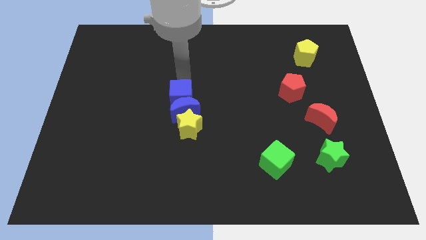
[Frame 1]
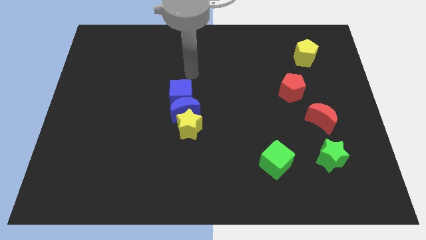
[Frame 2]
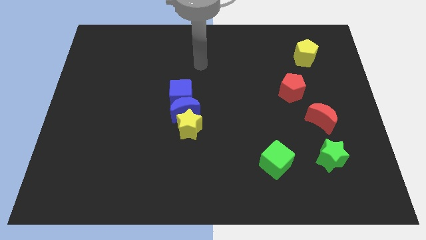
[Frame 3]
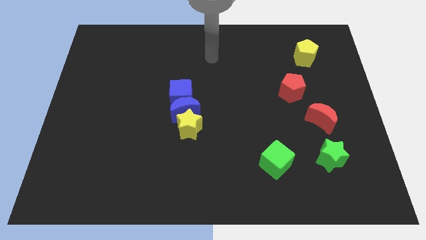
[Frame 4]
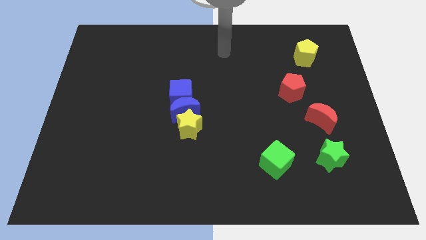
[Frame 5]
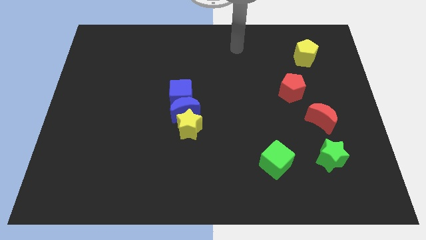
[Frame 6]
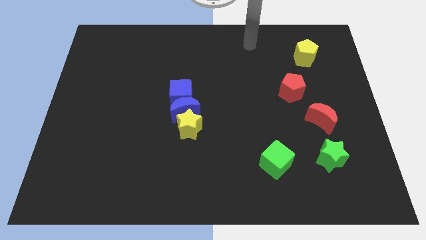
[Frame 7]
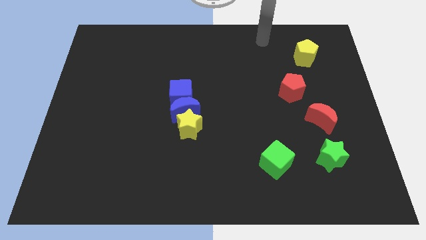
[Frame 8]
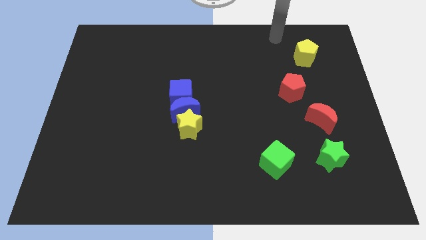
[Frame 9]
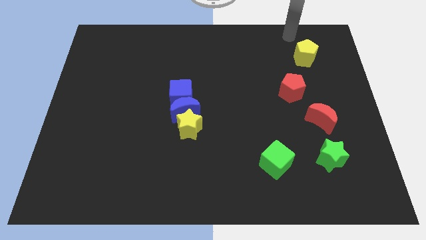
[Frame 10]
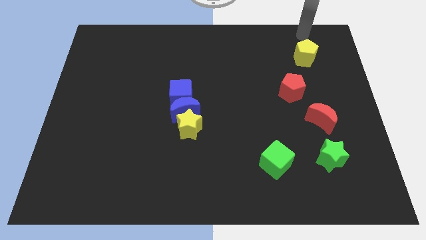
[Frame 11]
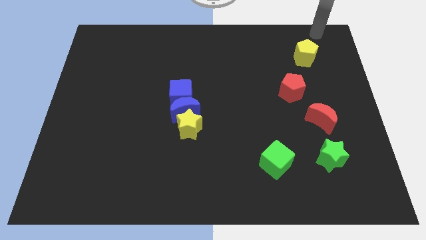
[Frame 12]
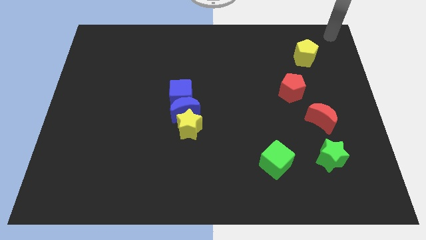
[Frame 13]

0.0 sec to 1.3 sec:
point your arm at the top right corner of the board

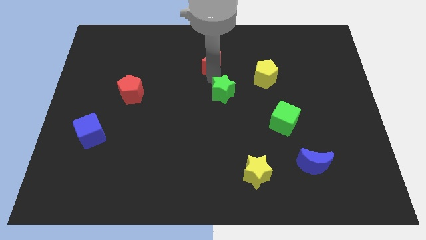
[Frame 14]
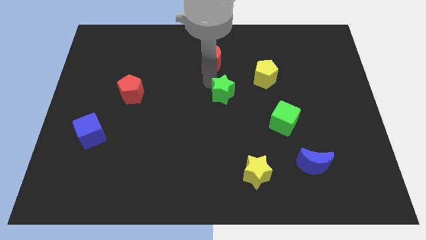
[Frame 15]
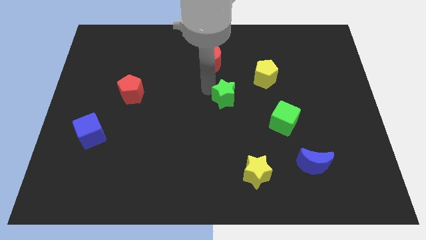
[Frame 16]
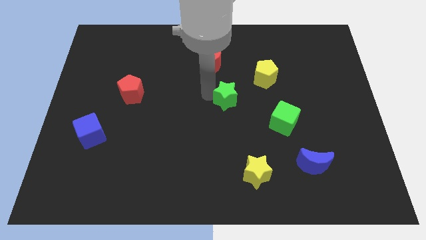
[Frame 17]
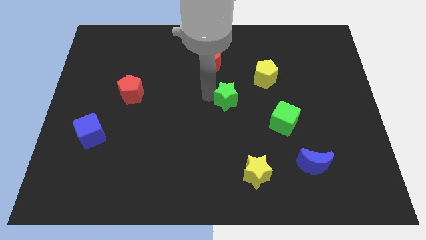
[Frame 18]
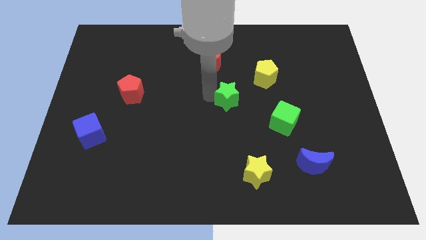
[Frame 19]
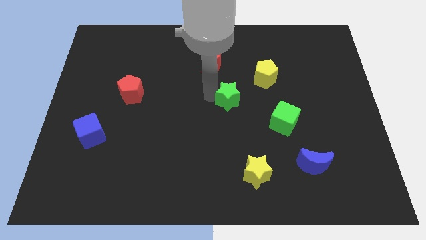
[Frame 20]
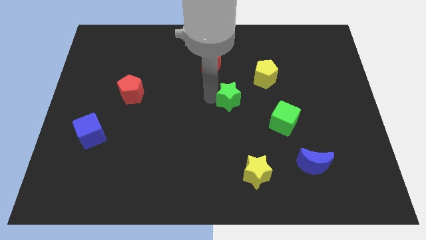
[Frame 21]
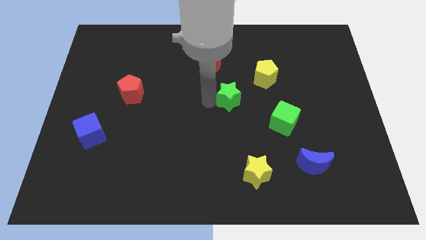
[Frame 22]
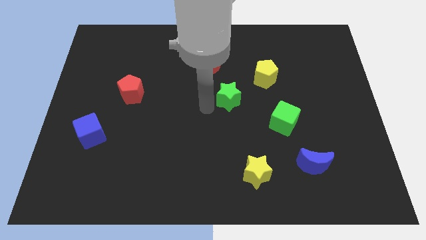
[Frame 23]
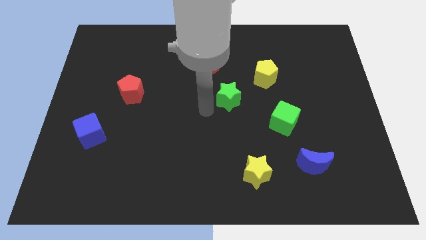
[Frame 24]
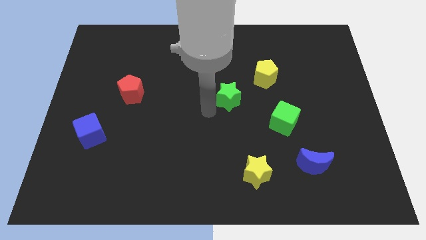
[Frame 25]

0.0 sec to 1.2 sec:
touch the left side of the green star

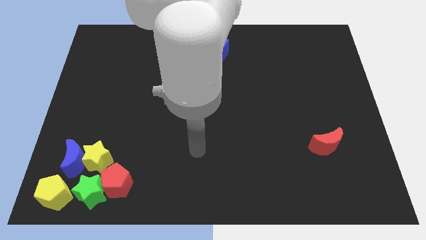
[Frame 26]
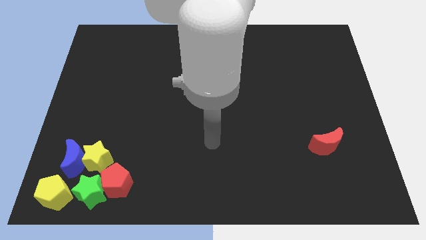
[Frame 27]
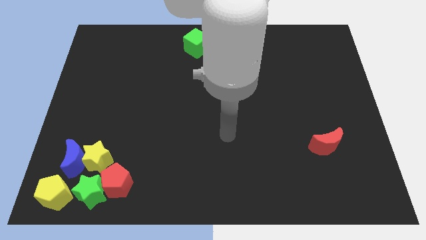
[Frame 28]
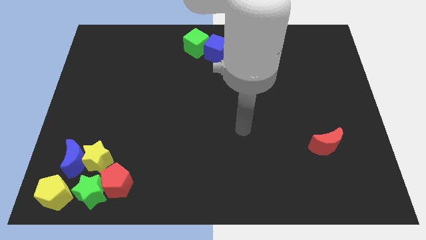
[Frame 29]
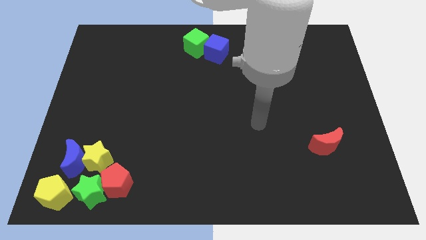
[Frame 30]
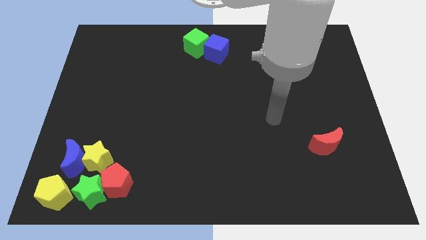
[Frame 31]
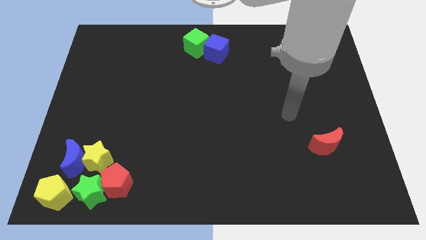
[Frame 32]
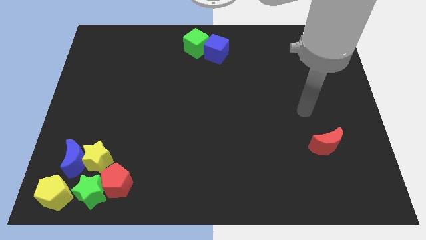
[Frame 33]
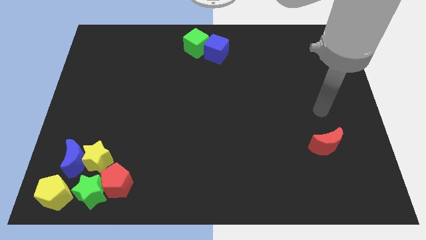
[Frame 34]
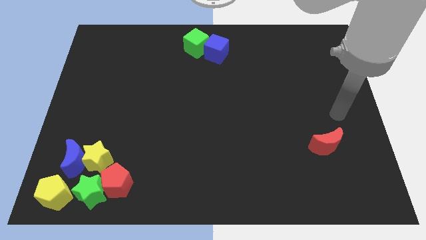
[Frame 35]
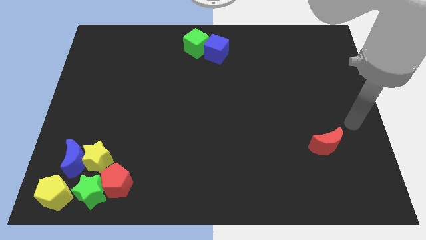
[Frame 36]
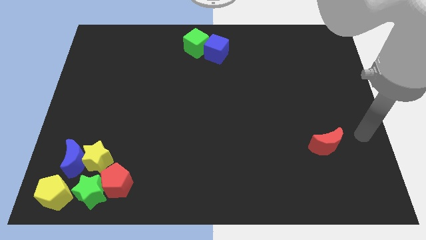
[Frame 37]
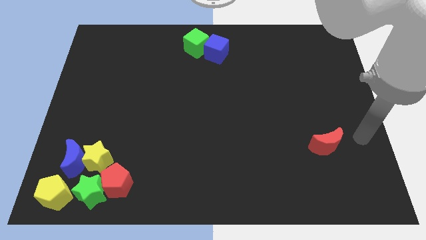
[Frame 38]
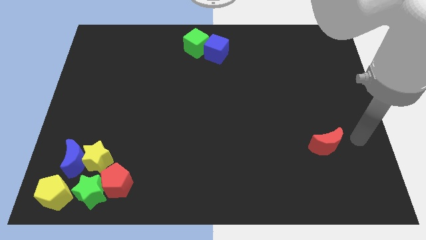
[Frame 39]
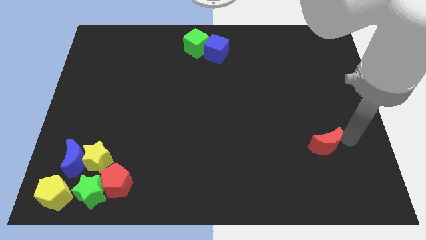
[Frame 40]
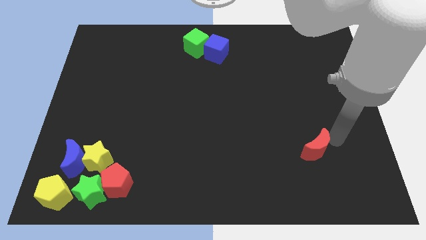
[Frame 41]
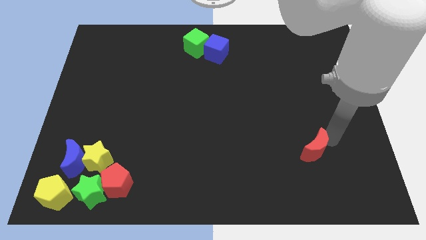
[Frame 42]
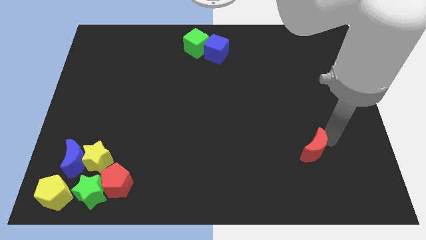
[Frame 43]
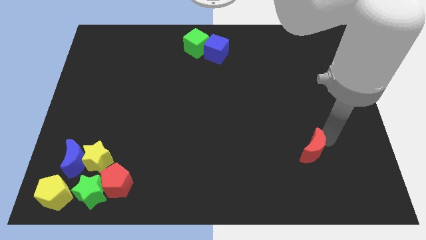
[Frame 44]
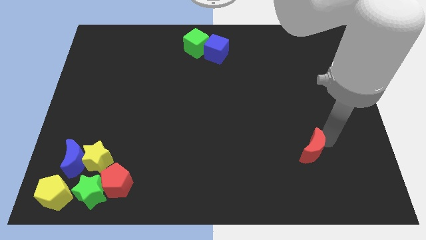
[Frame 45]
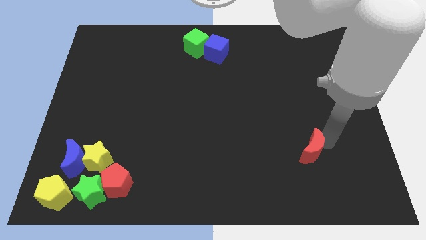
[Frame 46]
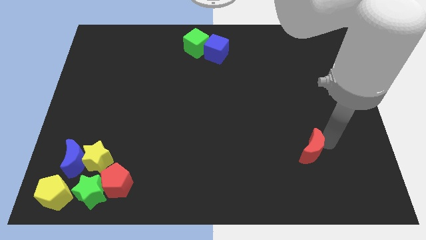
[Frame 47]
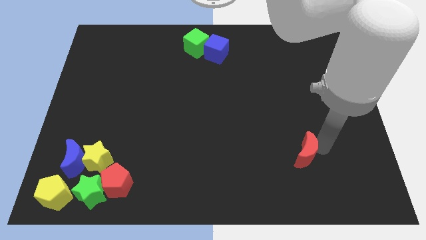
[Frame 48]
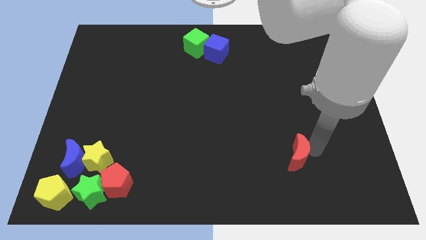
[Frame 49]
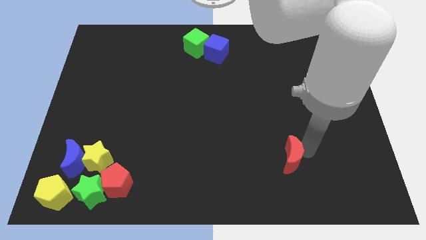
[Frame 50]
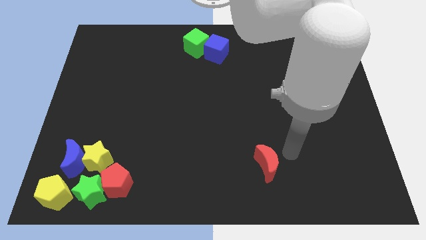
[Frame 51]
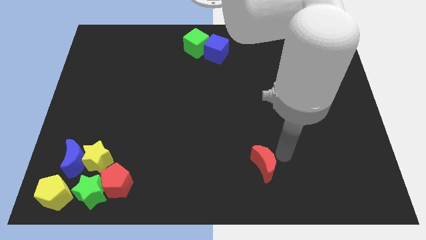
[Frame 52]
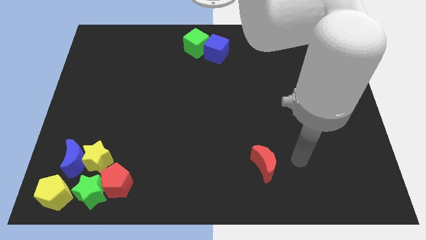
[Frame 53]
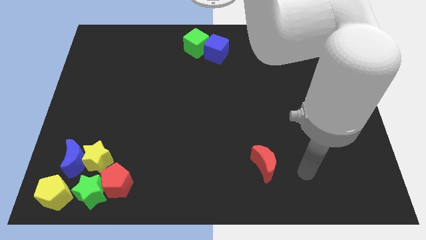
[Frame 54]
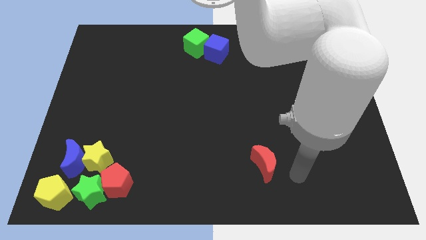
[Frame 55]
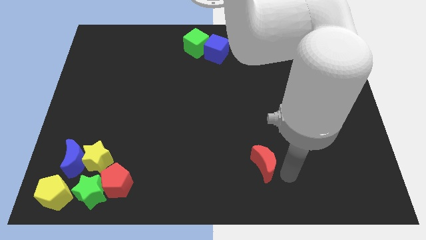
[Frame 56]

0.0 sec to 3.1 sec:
move the red crescent slightly to the left

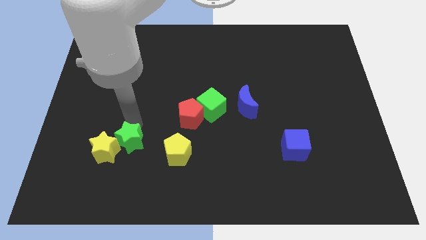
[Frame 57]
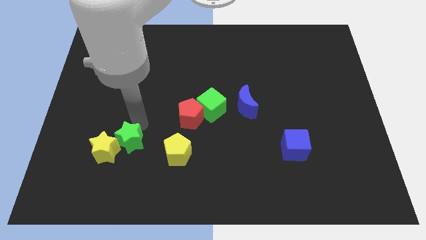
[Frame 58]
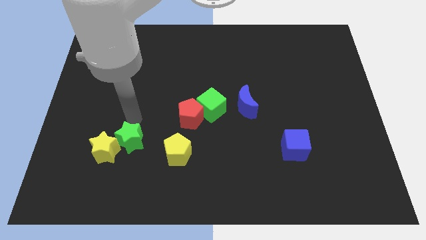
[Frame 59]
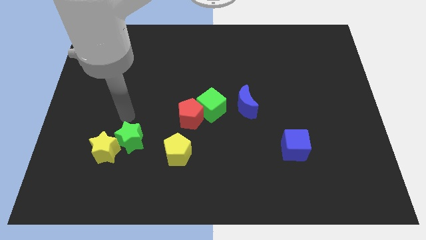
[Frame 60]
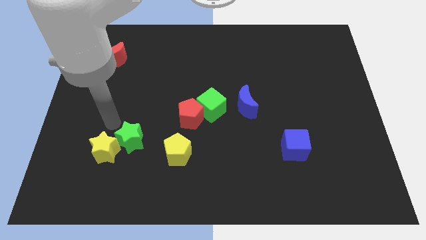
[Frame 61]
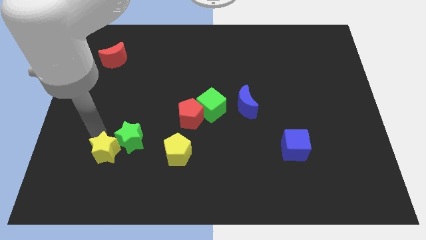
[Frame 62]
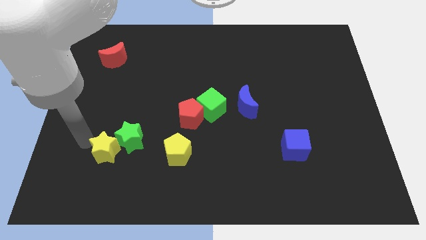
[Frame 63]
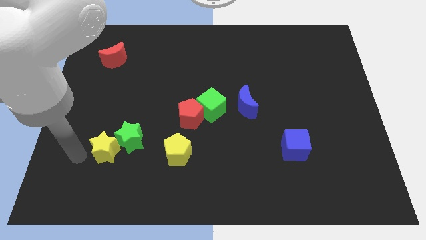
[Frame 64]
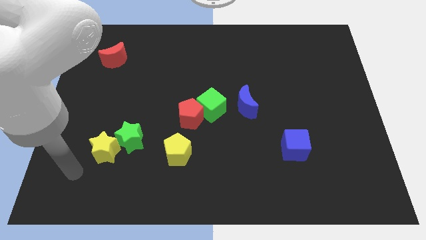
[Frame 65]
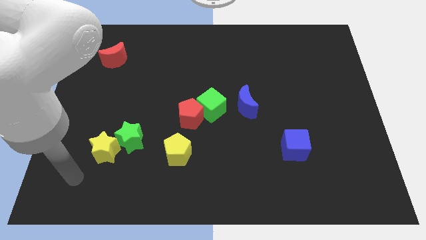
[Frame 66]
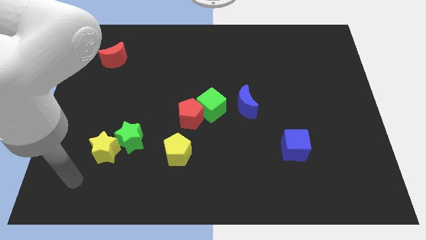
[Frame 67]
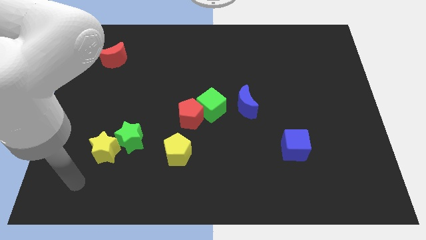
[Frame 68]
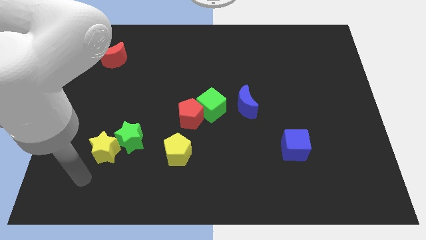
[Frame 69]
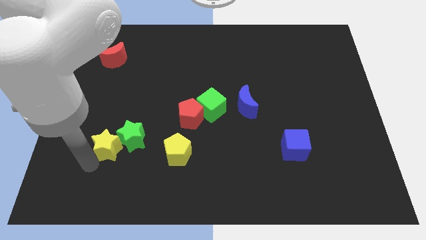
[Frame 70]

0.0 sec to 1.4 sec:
move your arm to the left of the yellow star

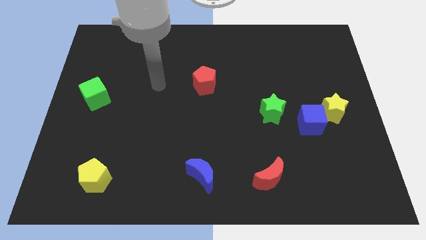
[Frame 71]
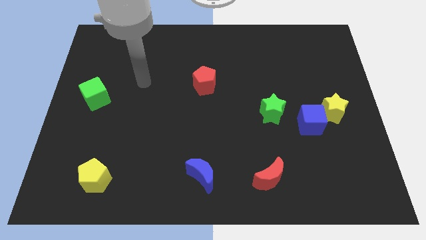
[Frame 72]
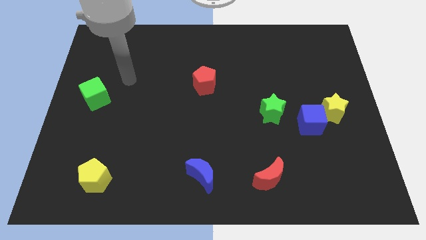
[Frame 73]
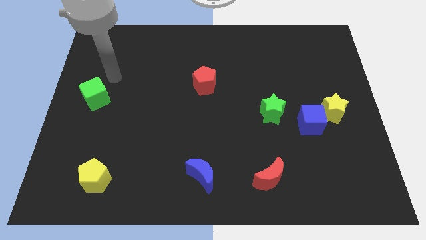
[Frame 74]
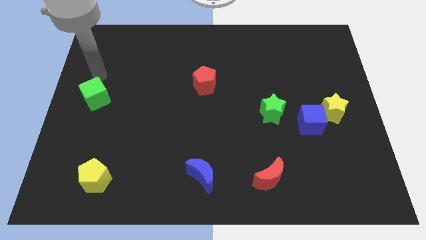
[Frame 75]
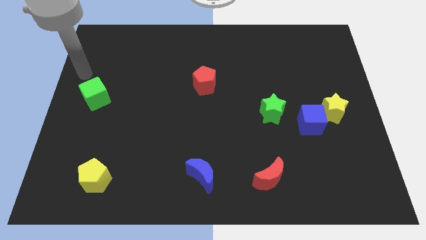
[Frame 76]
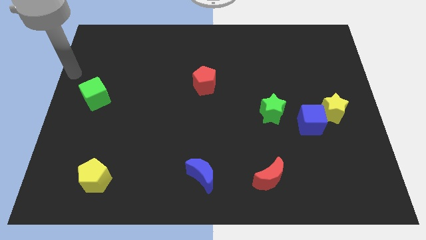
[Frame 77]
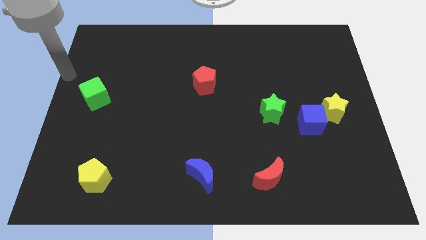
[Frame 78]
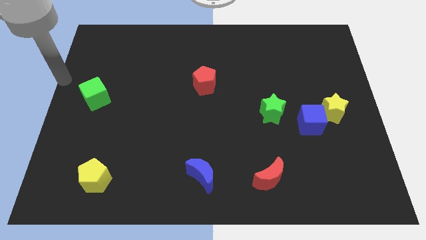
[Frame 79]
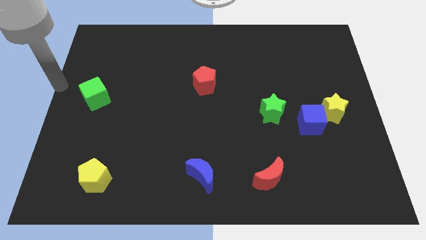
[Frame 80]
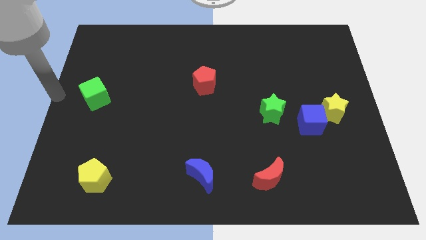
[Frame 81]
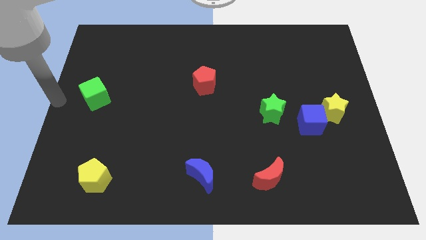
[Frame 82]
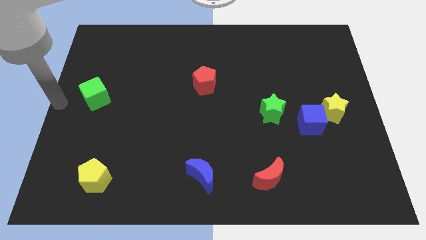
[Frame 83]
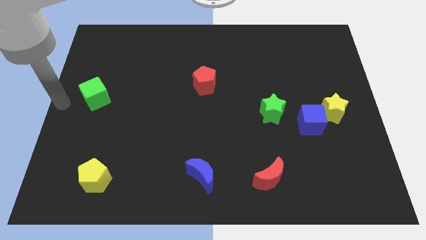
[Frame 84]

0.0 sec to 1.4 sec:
move arm close to green cube

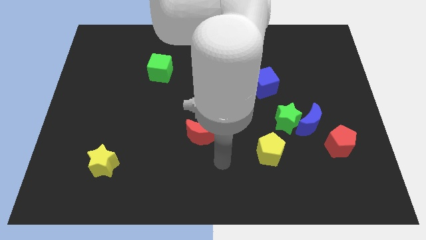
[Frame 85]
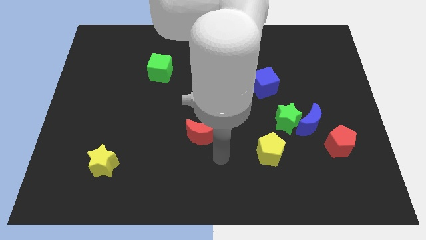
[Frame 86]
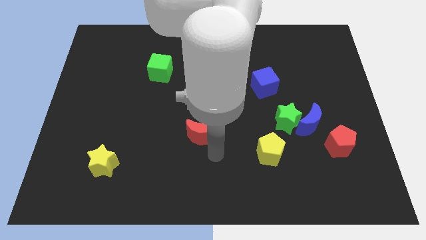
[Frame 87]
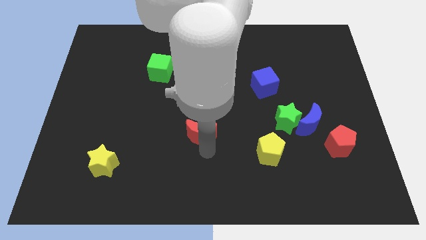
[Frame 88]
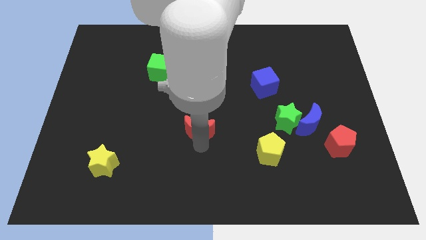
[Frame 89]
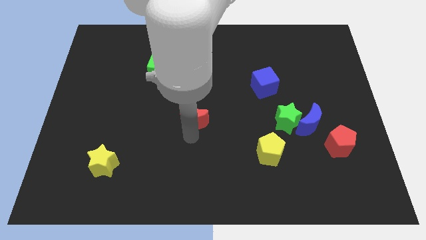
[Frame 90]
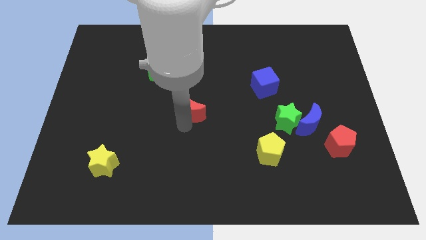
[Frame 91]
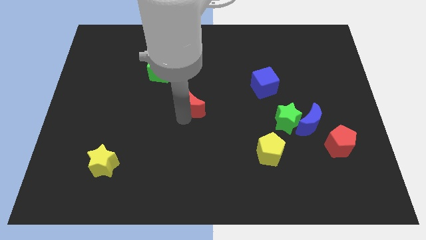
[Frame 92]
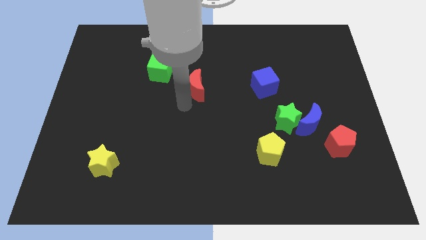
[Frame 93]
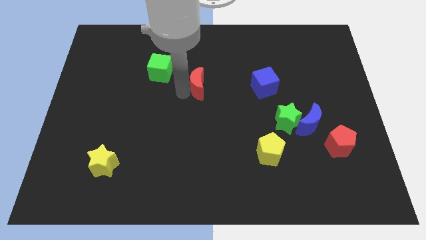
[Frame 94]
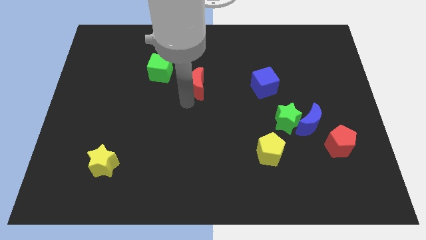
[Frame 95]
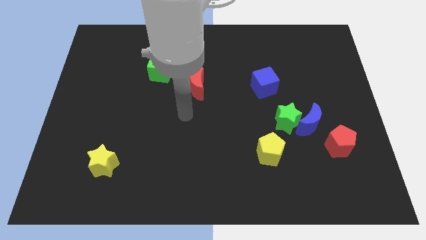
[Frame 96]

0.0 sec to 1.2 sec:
place the red crescent in the center
